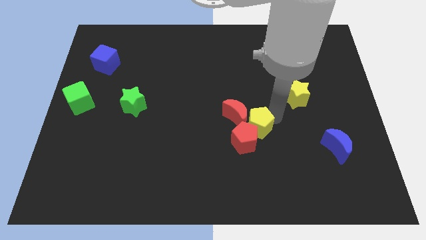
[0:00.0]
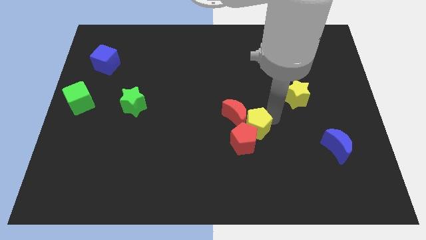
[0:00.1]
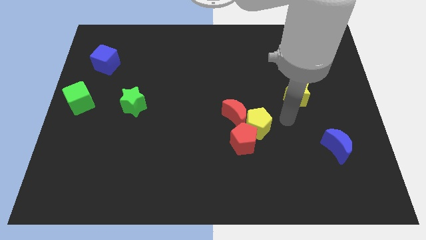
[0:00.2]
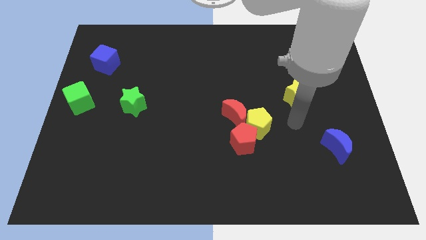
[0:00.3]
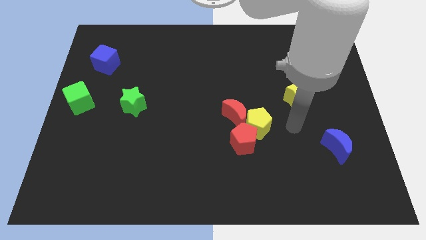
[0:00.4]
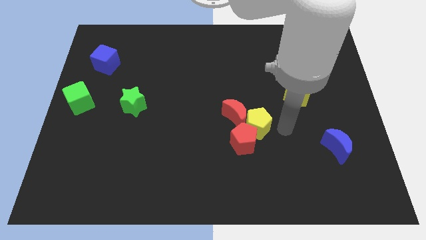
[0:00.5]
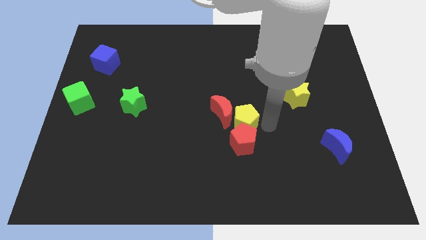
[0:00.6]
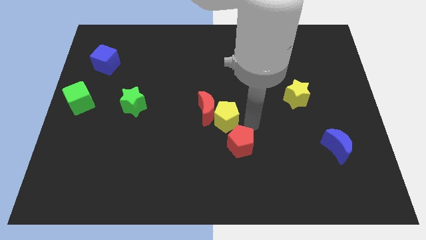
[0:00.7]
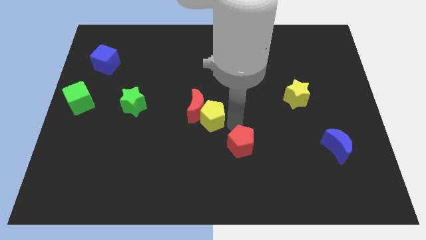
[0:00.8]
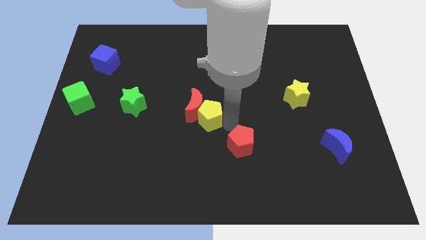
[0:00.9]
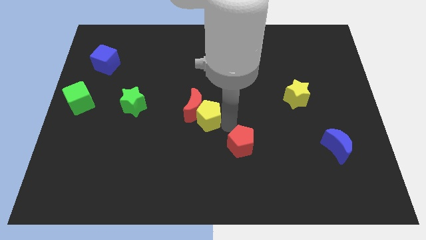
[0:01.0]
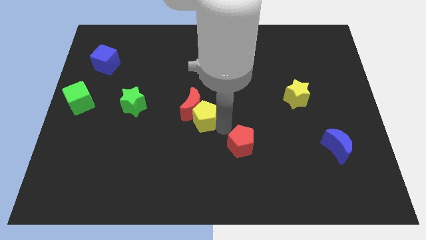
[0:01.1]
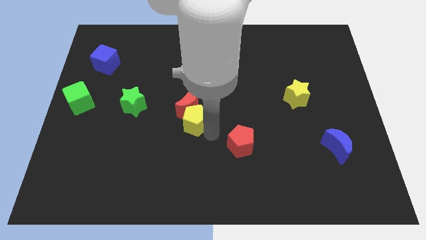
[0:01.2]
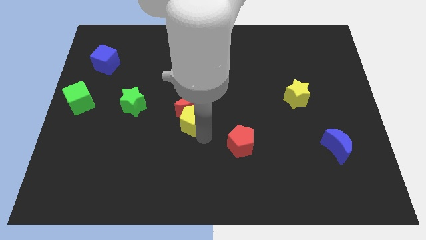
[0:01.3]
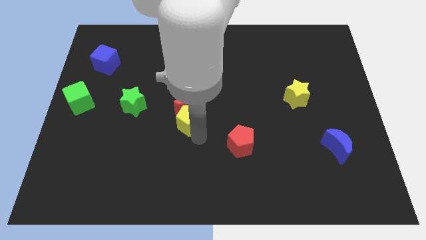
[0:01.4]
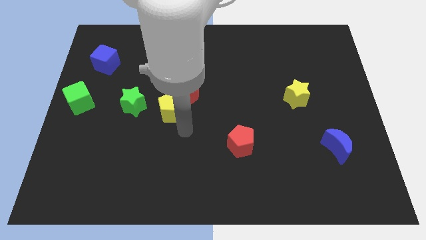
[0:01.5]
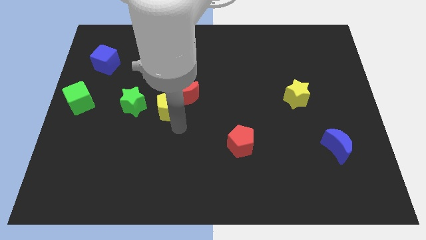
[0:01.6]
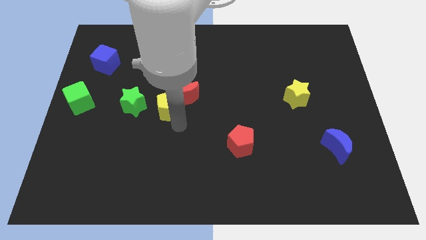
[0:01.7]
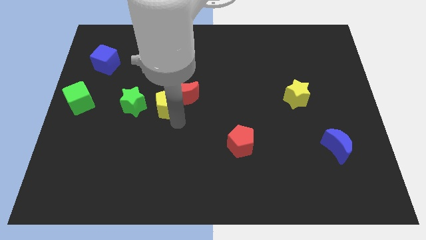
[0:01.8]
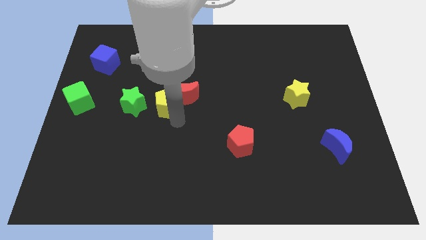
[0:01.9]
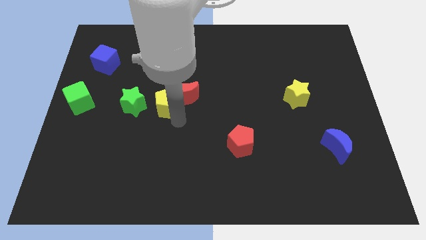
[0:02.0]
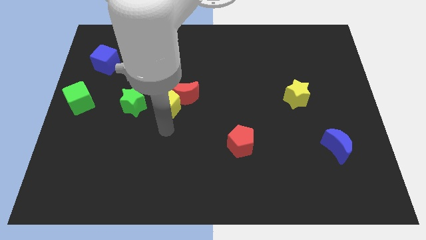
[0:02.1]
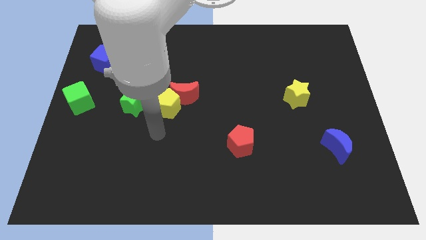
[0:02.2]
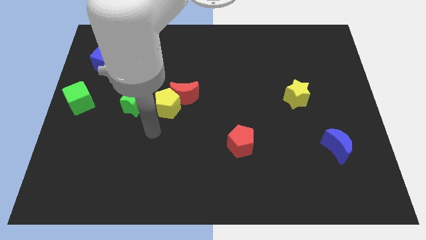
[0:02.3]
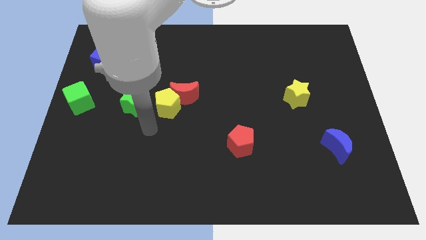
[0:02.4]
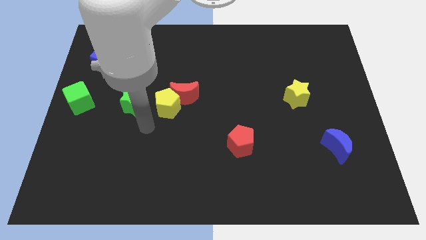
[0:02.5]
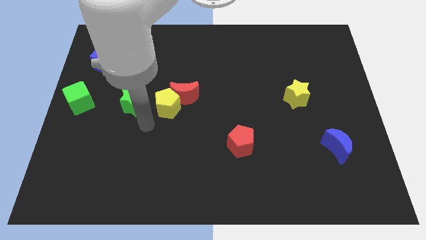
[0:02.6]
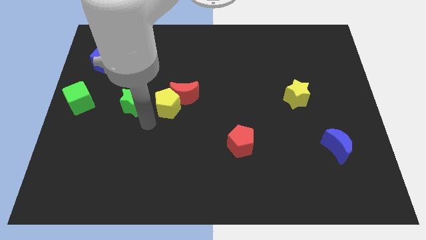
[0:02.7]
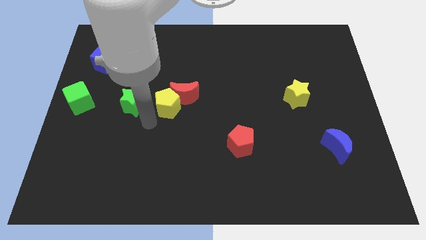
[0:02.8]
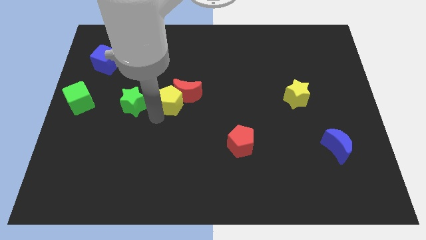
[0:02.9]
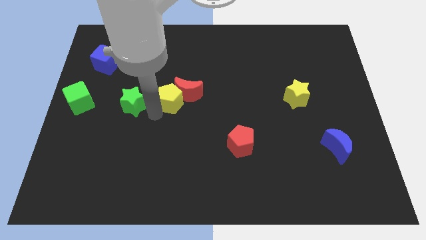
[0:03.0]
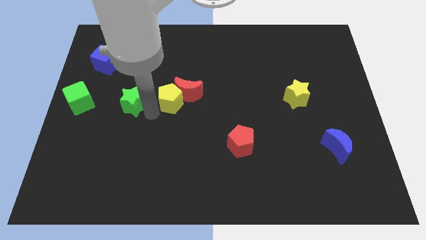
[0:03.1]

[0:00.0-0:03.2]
place the yellow pentagon to the right of the green star

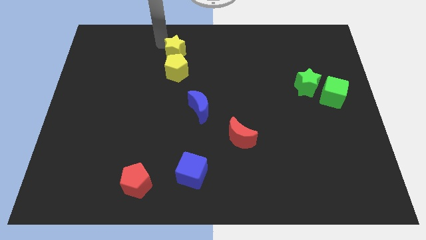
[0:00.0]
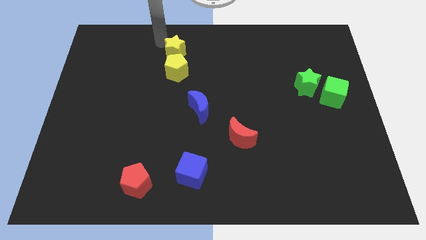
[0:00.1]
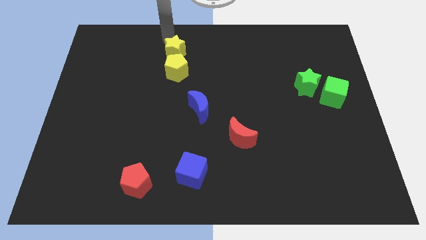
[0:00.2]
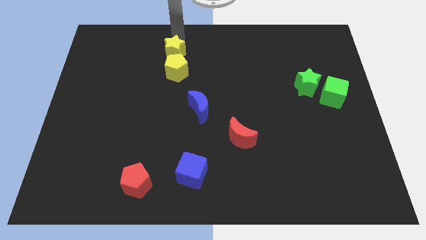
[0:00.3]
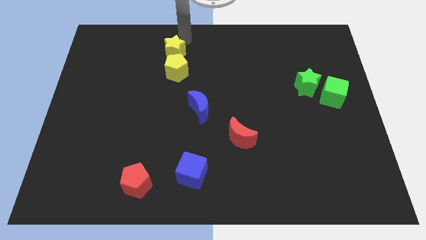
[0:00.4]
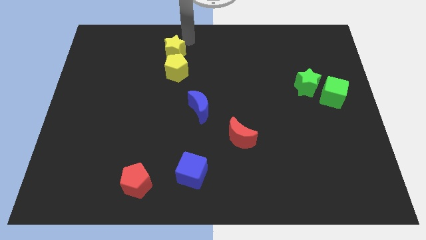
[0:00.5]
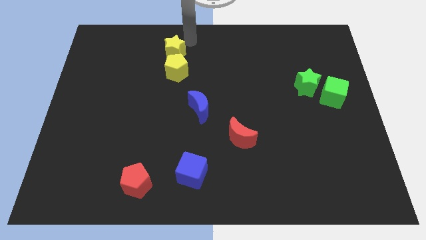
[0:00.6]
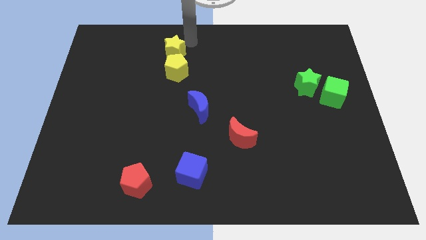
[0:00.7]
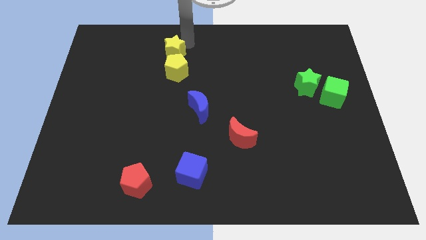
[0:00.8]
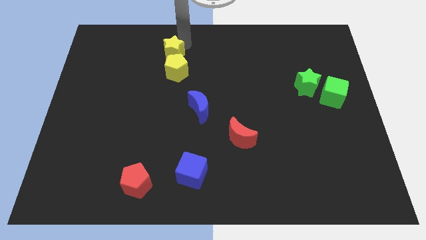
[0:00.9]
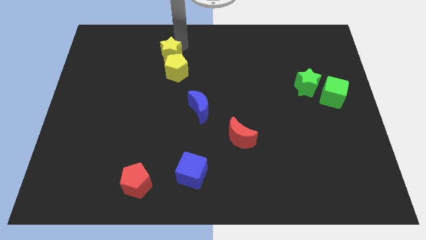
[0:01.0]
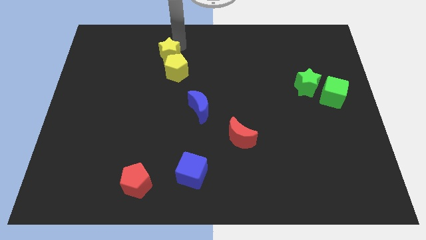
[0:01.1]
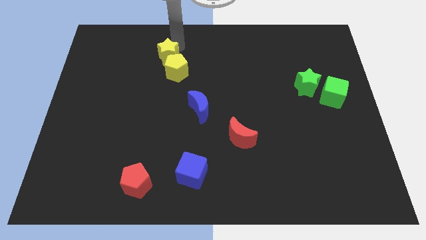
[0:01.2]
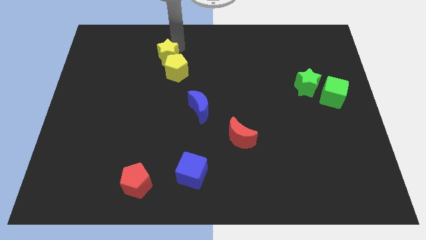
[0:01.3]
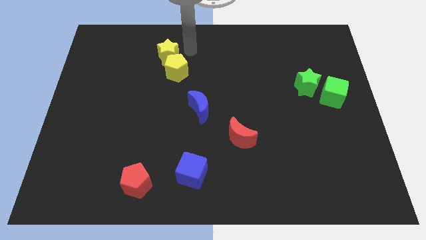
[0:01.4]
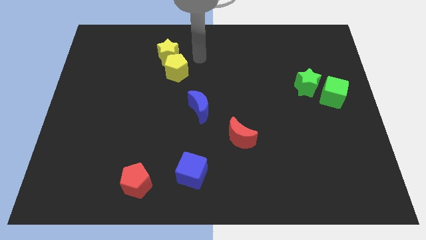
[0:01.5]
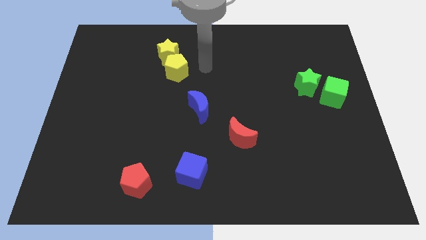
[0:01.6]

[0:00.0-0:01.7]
move the yellow star to the top left side of the yellow pentagon

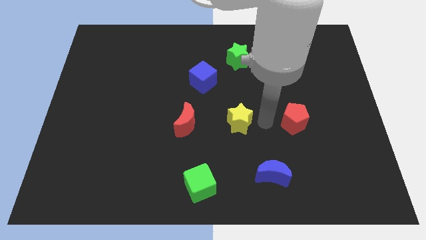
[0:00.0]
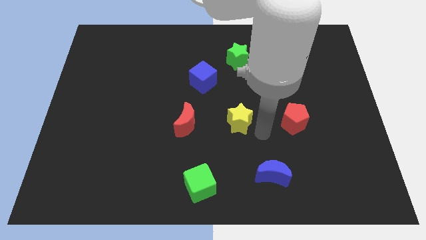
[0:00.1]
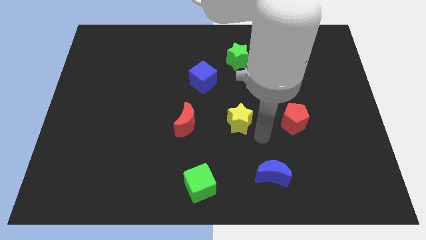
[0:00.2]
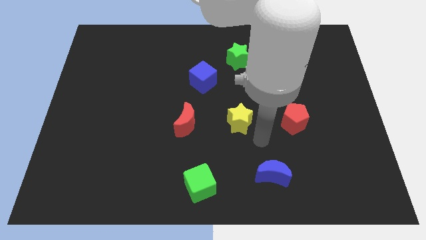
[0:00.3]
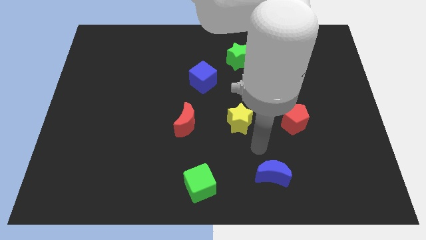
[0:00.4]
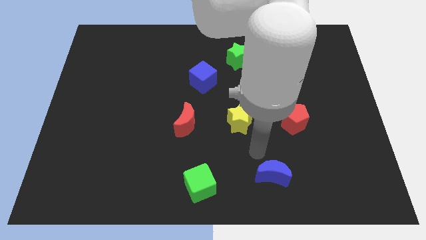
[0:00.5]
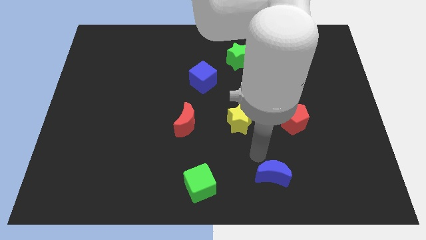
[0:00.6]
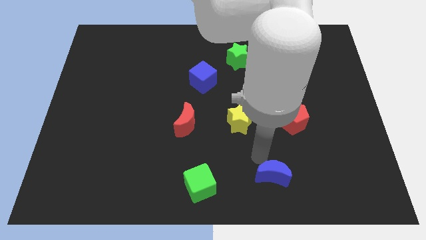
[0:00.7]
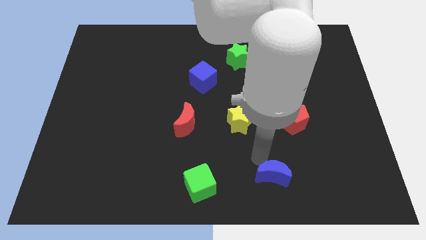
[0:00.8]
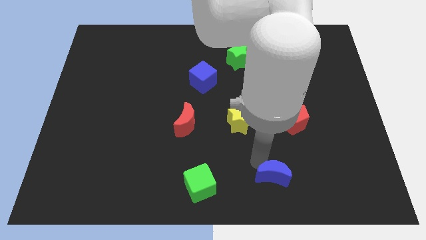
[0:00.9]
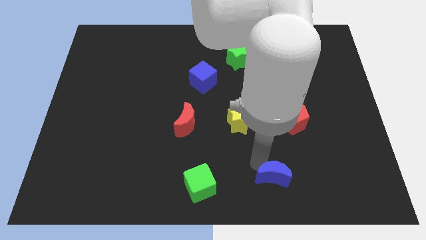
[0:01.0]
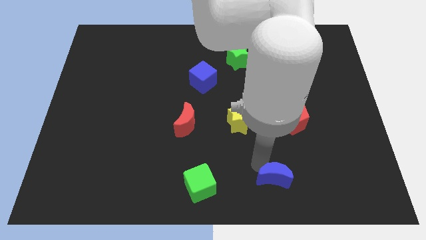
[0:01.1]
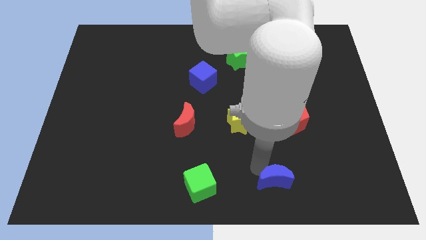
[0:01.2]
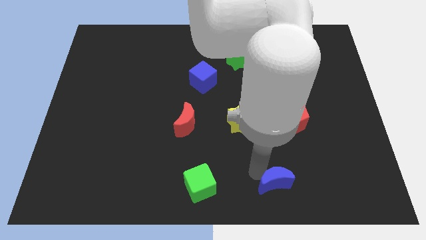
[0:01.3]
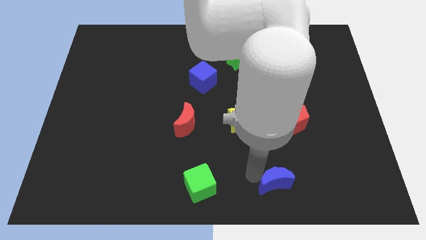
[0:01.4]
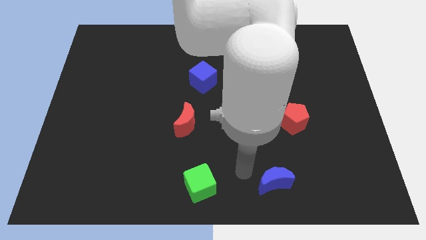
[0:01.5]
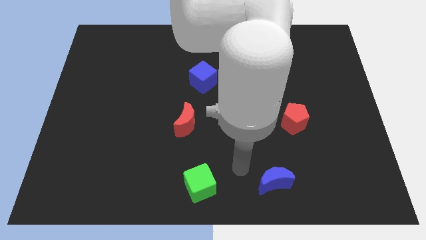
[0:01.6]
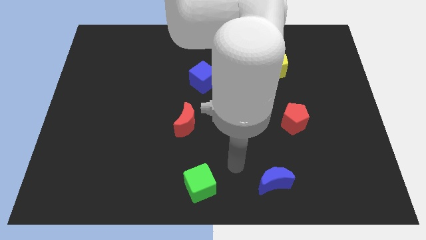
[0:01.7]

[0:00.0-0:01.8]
push the blue crescent slightly down

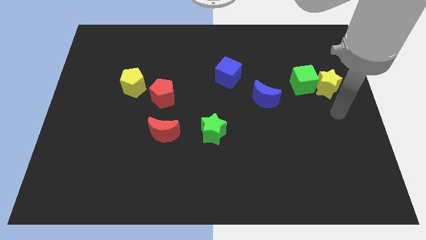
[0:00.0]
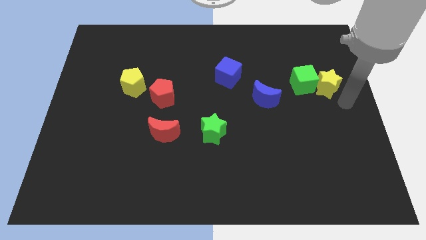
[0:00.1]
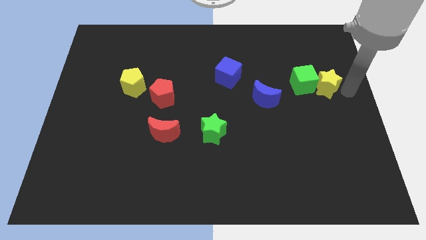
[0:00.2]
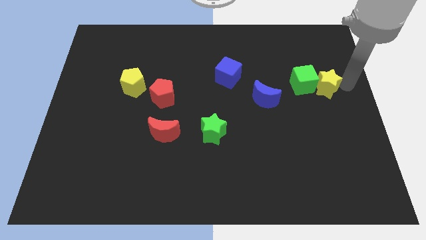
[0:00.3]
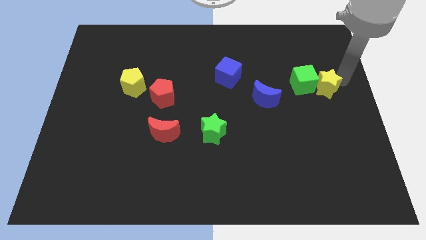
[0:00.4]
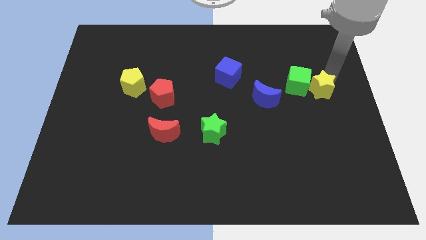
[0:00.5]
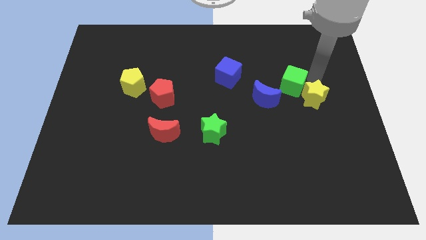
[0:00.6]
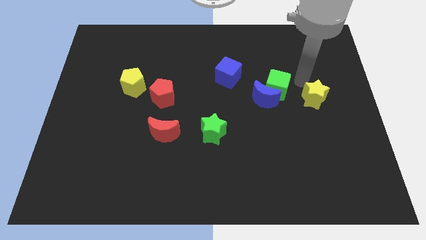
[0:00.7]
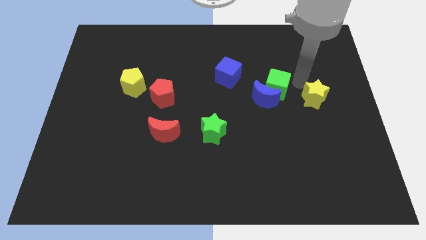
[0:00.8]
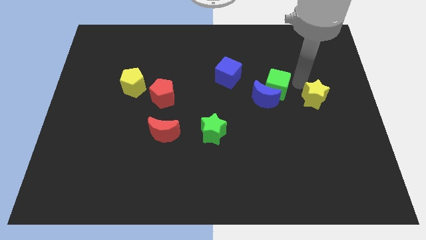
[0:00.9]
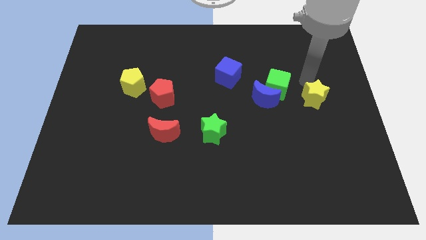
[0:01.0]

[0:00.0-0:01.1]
separate the green cube and yellow star from each other

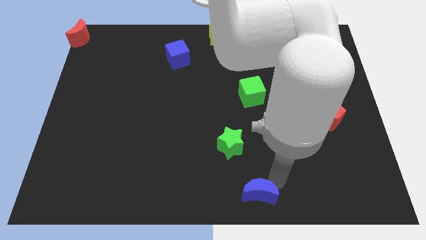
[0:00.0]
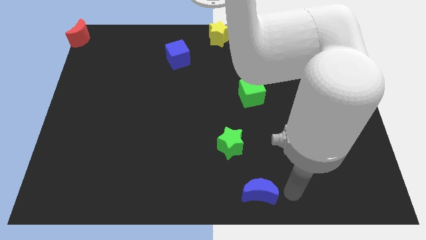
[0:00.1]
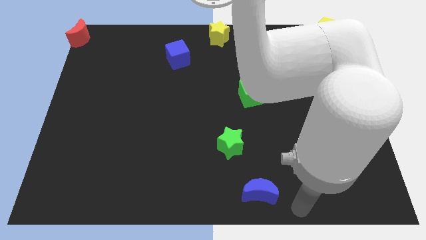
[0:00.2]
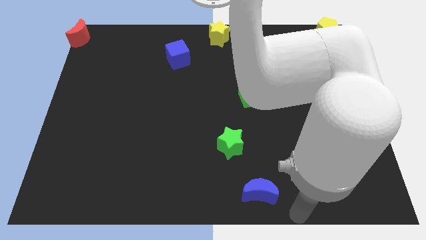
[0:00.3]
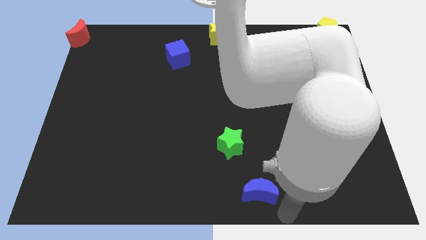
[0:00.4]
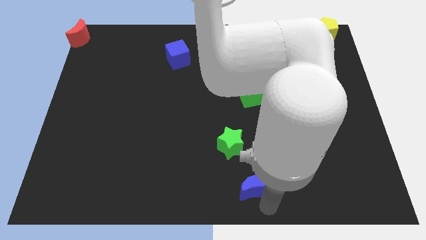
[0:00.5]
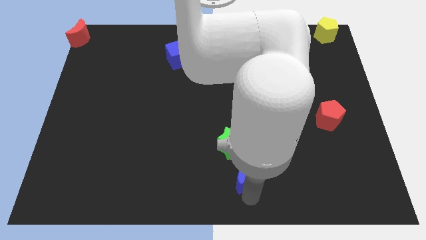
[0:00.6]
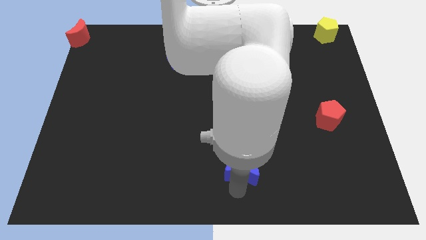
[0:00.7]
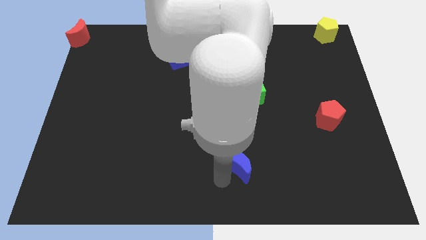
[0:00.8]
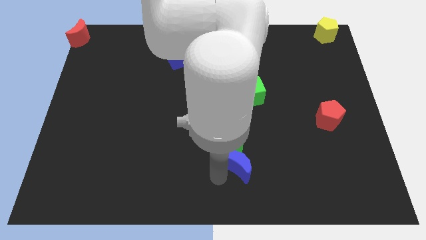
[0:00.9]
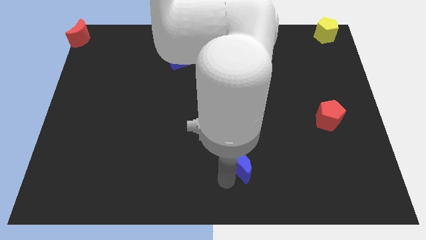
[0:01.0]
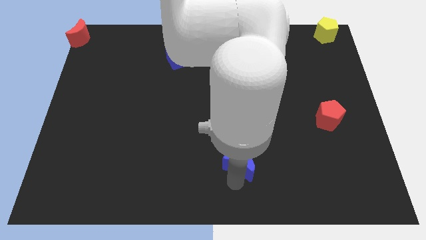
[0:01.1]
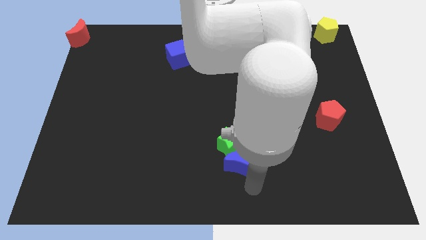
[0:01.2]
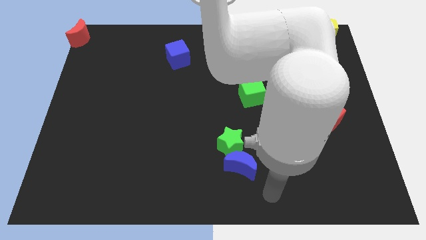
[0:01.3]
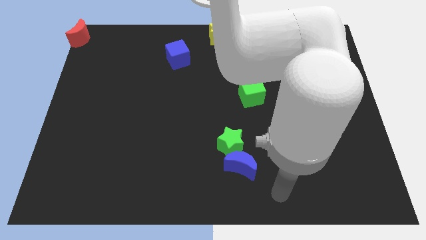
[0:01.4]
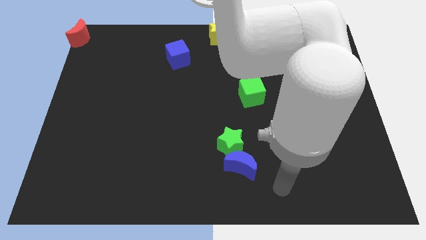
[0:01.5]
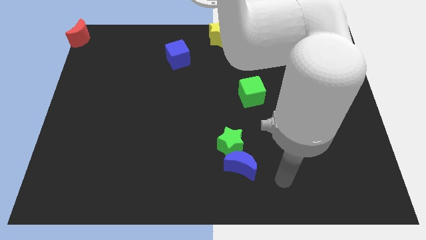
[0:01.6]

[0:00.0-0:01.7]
push the blue moon to the bottom side of the green star
